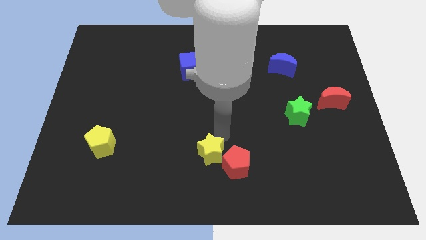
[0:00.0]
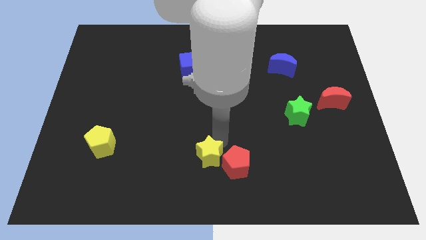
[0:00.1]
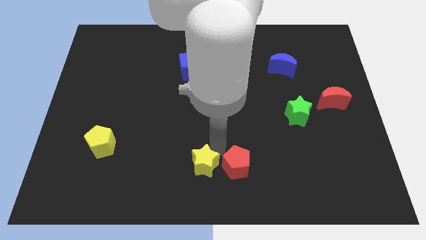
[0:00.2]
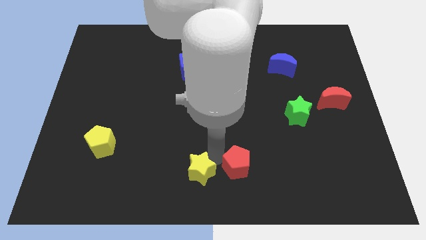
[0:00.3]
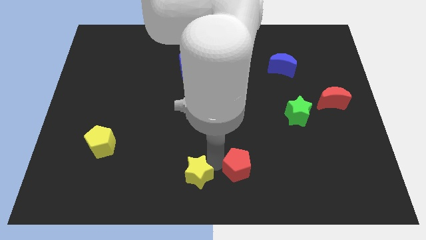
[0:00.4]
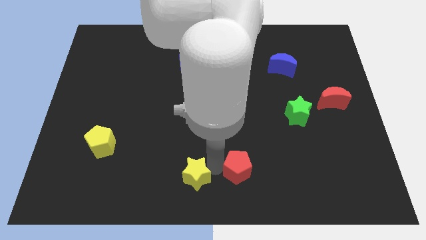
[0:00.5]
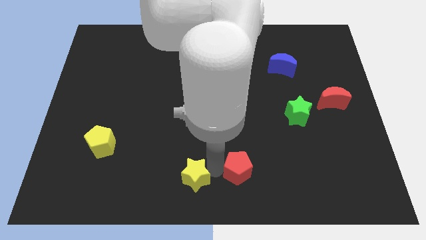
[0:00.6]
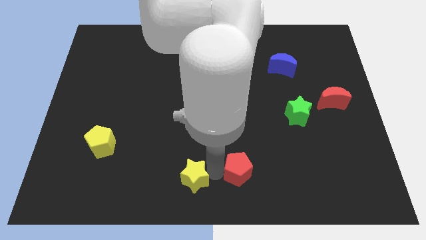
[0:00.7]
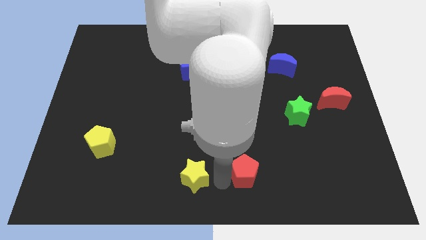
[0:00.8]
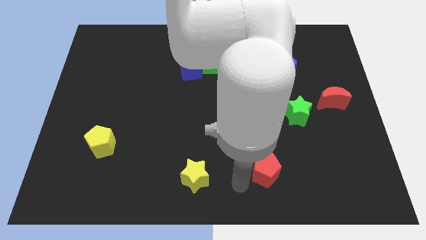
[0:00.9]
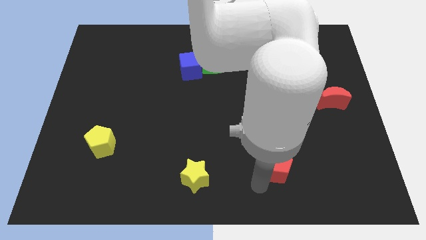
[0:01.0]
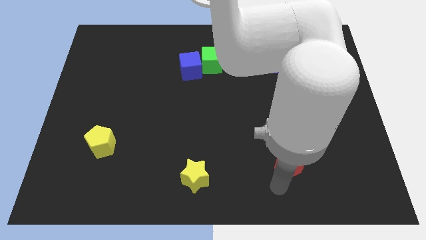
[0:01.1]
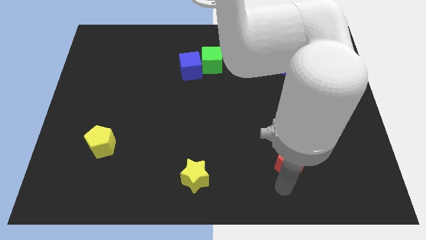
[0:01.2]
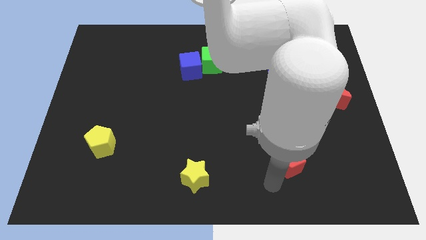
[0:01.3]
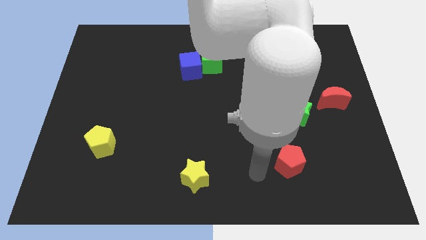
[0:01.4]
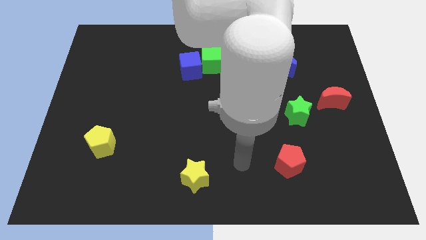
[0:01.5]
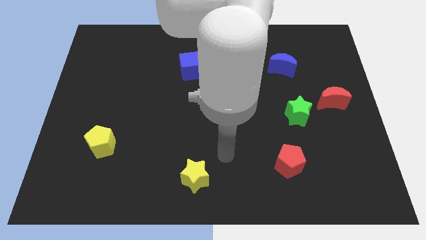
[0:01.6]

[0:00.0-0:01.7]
separate the red pentagon from the yellow star

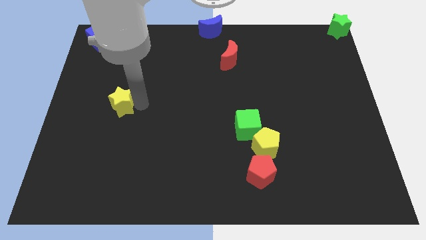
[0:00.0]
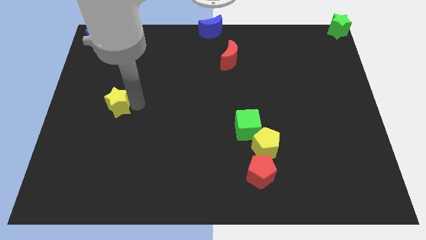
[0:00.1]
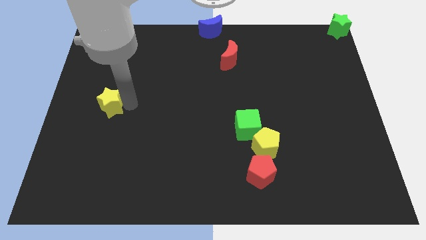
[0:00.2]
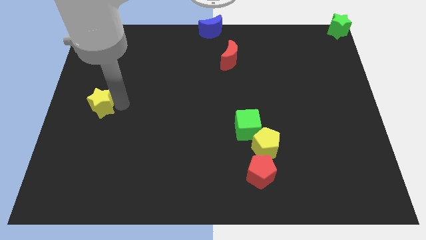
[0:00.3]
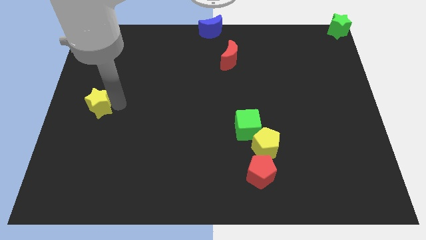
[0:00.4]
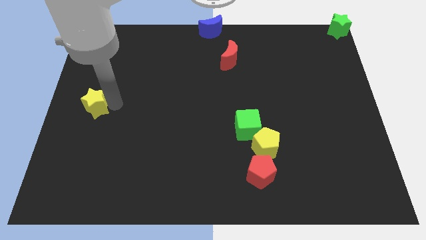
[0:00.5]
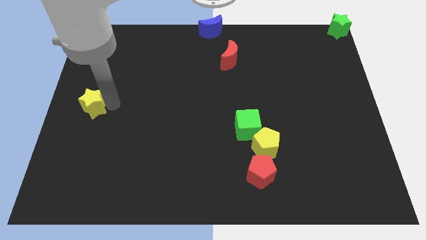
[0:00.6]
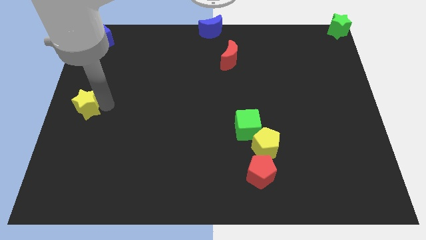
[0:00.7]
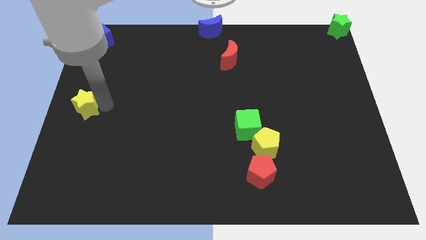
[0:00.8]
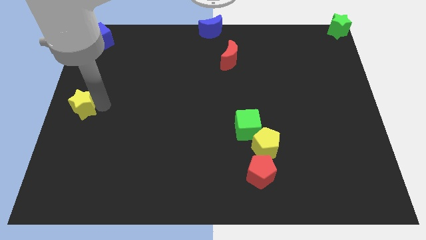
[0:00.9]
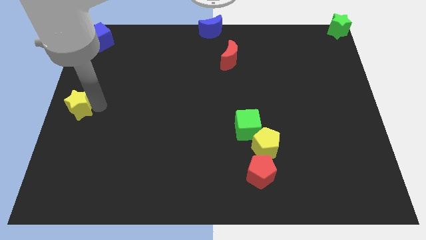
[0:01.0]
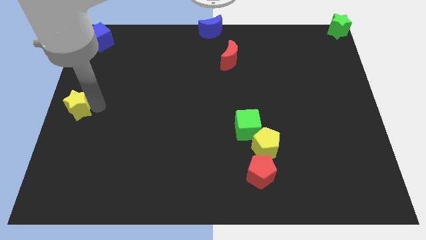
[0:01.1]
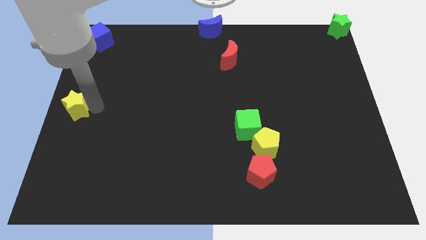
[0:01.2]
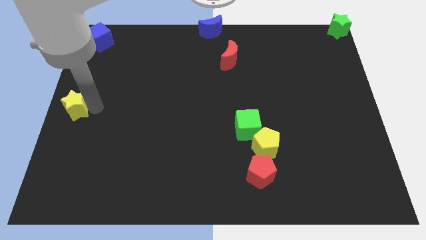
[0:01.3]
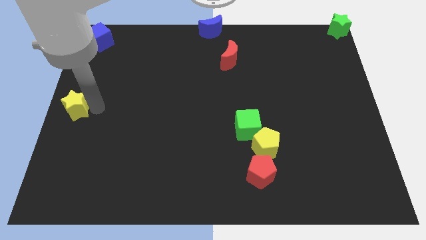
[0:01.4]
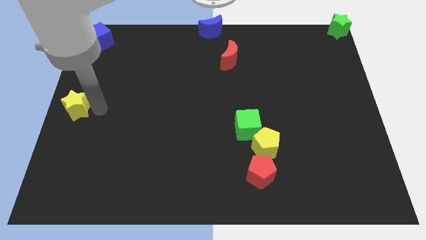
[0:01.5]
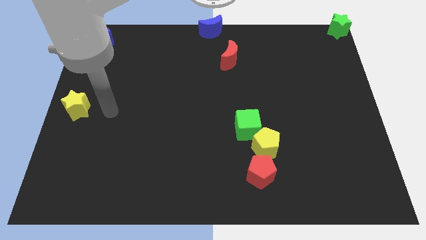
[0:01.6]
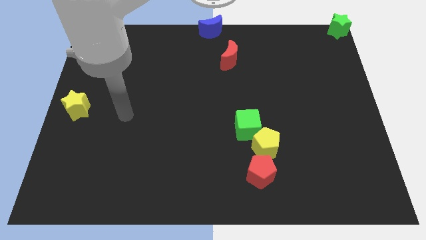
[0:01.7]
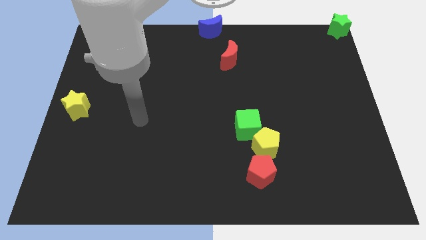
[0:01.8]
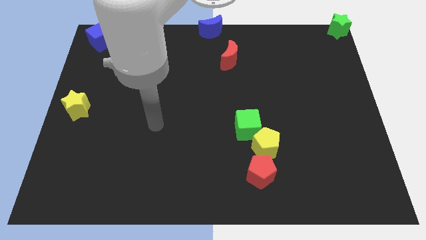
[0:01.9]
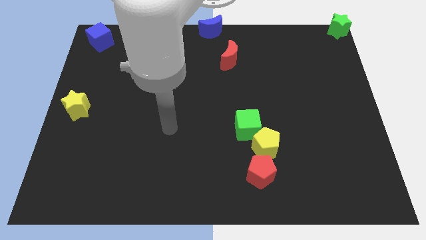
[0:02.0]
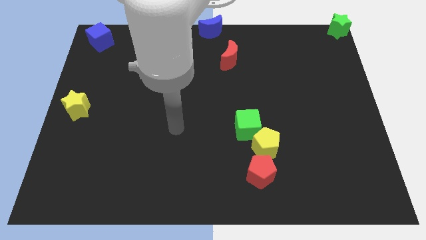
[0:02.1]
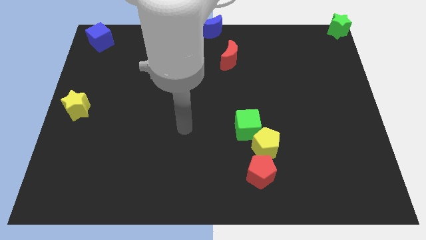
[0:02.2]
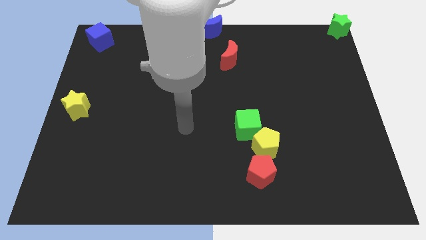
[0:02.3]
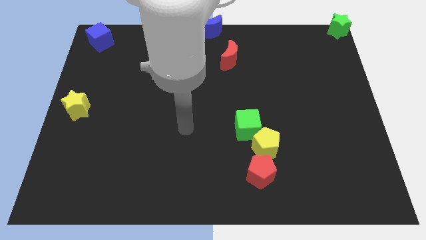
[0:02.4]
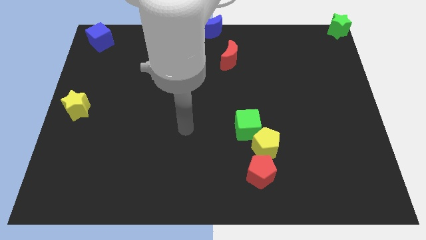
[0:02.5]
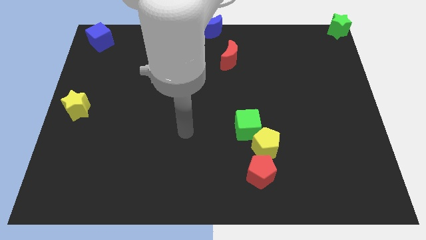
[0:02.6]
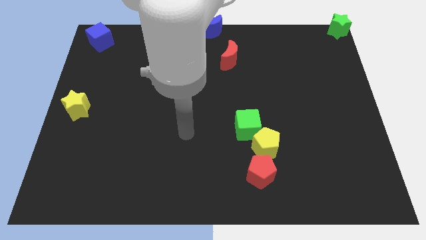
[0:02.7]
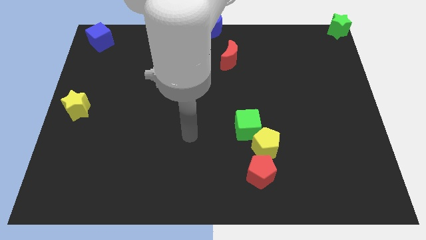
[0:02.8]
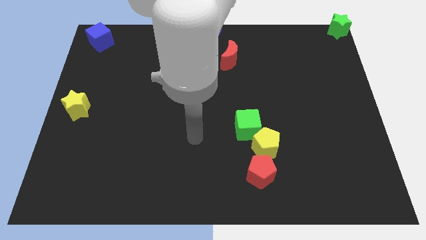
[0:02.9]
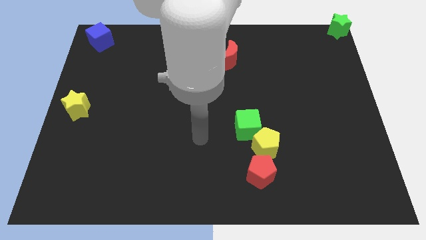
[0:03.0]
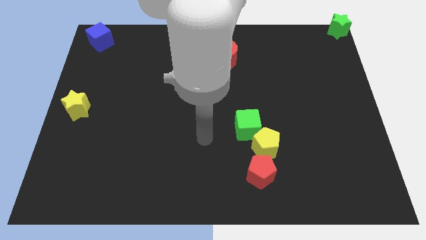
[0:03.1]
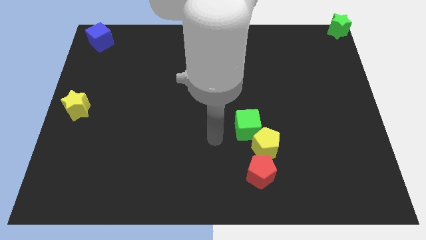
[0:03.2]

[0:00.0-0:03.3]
place the yellow star towards the left center of the board

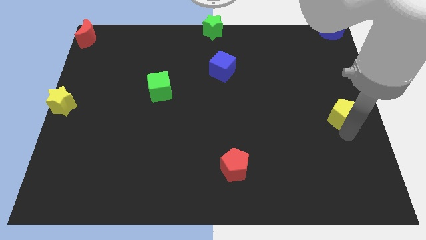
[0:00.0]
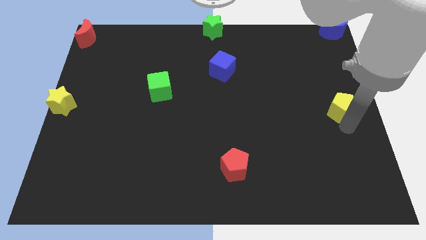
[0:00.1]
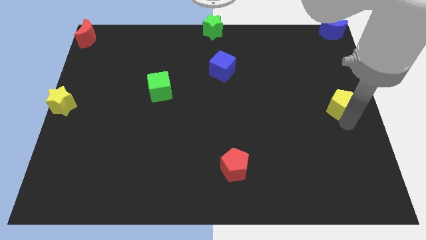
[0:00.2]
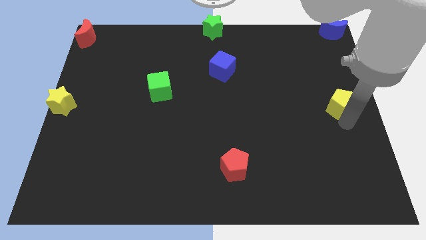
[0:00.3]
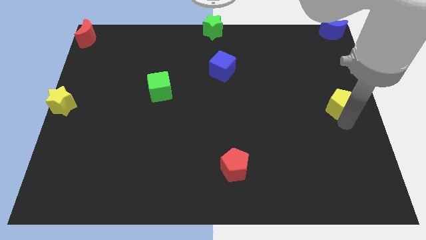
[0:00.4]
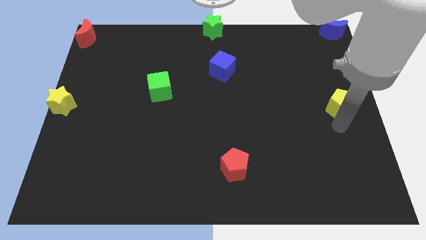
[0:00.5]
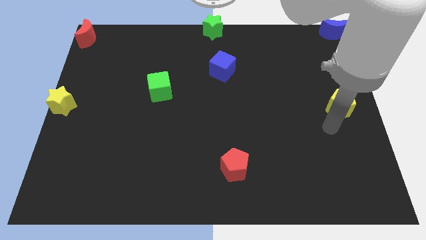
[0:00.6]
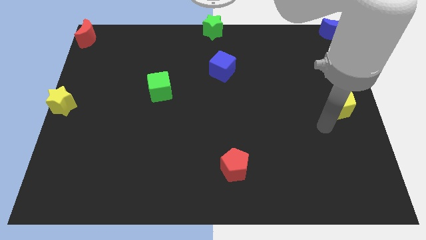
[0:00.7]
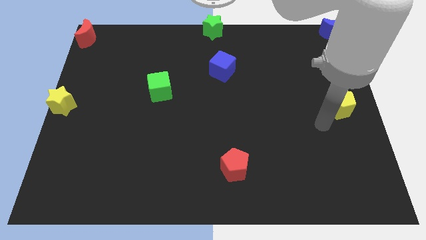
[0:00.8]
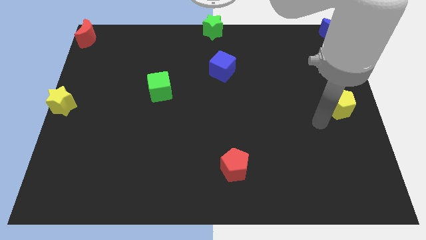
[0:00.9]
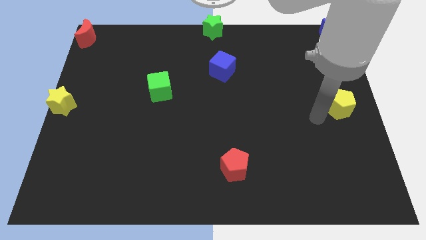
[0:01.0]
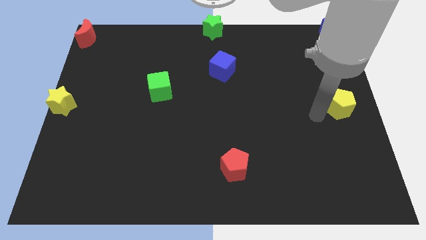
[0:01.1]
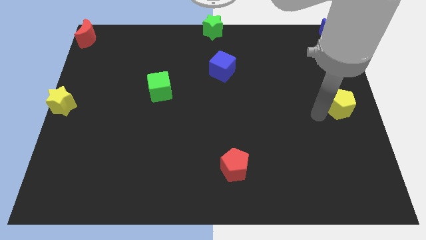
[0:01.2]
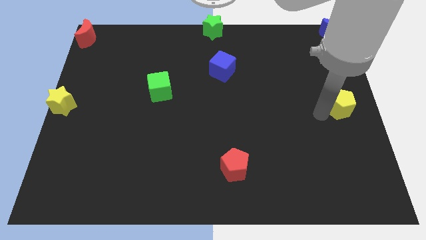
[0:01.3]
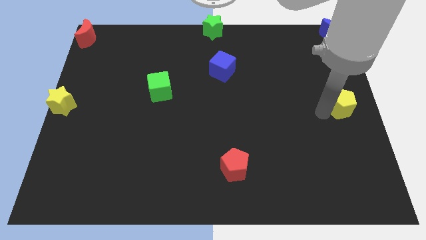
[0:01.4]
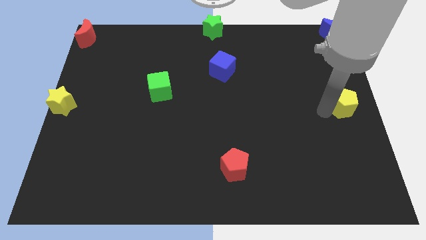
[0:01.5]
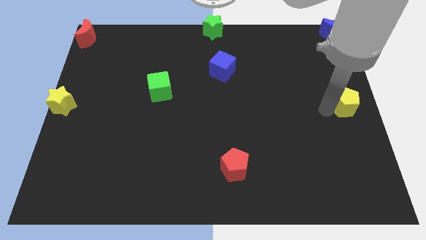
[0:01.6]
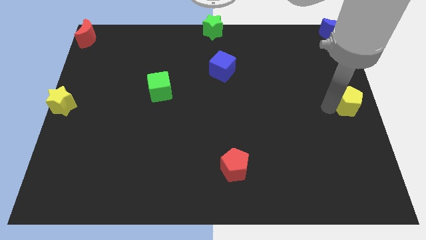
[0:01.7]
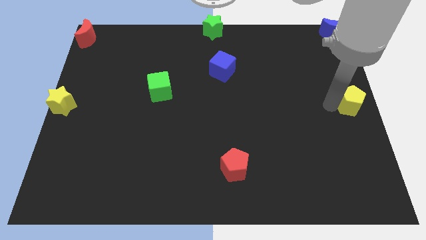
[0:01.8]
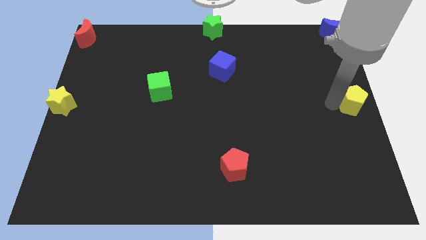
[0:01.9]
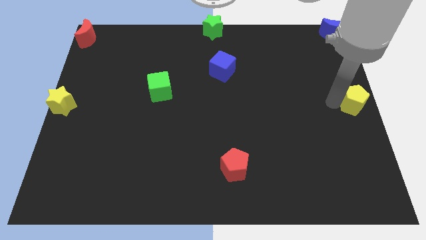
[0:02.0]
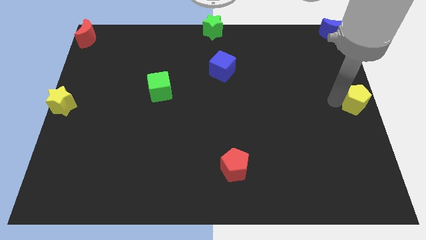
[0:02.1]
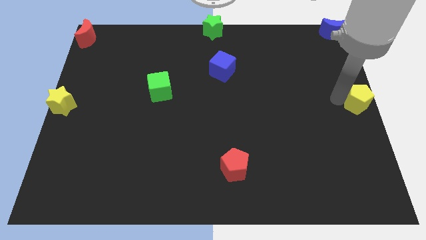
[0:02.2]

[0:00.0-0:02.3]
push the yellow pentagon to the right center of the board

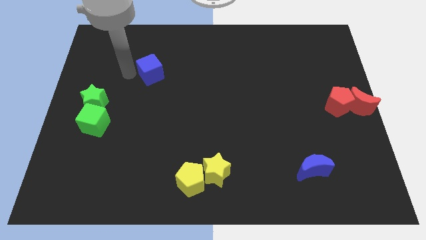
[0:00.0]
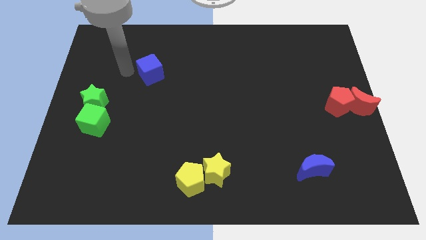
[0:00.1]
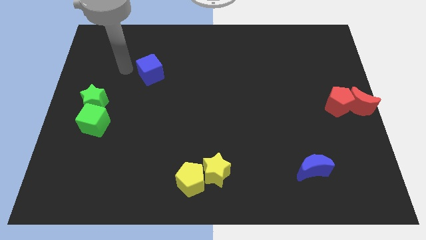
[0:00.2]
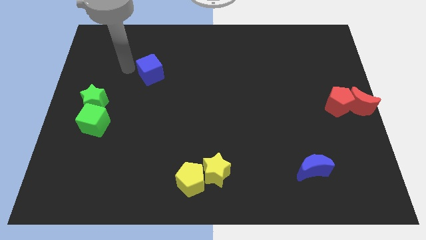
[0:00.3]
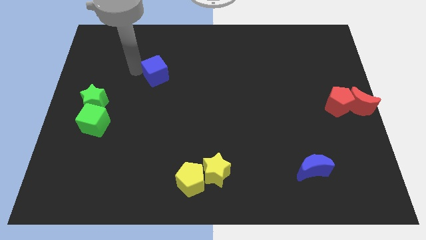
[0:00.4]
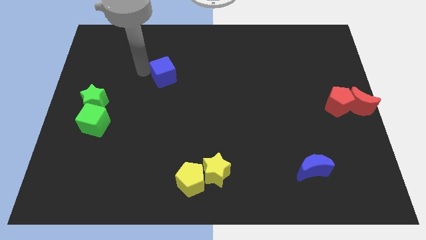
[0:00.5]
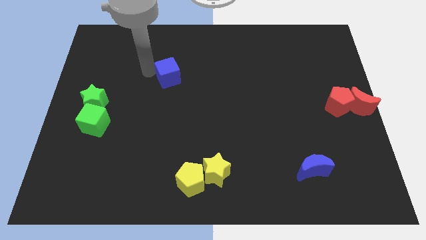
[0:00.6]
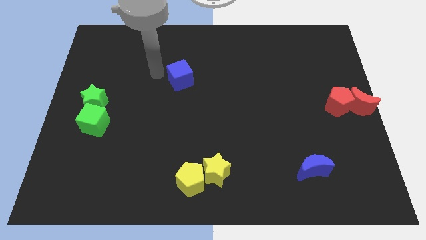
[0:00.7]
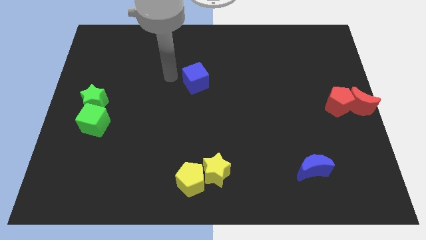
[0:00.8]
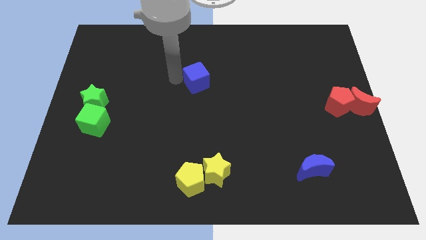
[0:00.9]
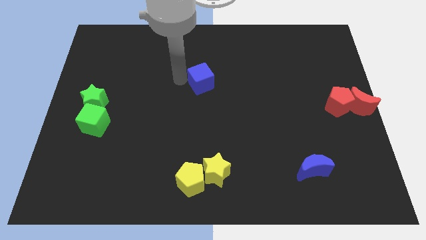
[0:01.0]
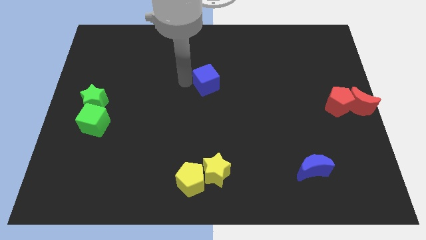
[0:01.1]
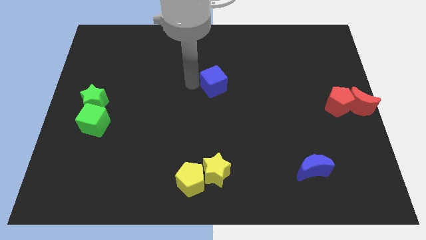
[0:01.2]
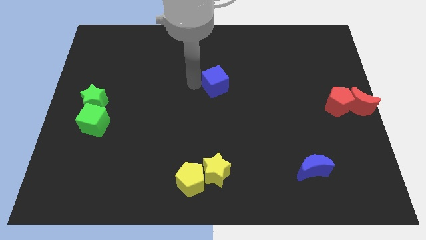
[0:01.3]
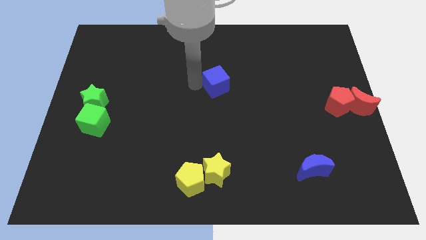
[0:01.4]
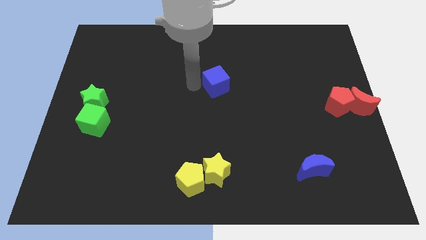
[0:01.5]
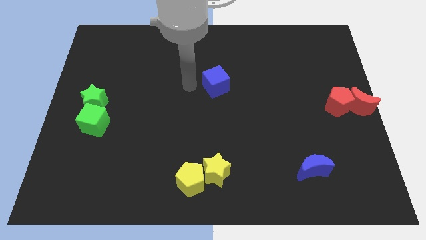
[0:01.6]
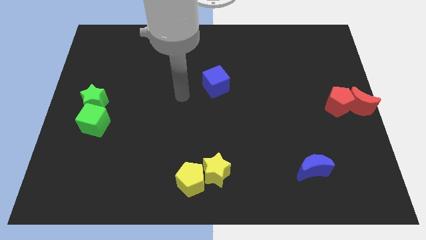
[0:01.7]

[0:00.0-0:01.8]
place the blue cube vertical parallel to the yellow star
